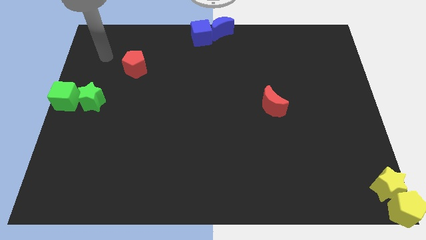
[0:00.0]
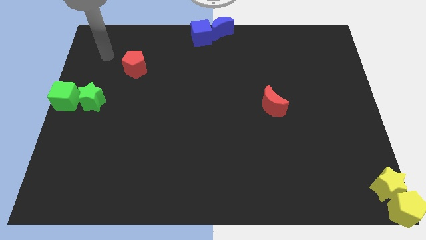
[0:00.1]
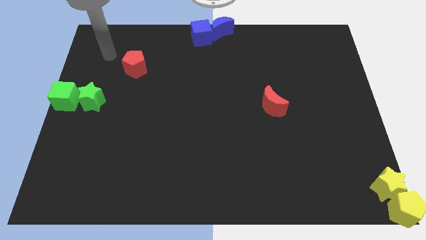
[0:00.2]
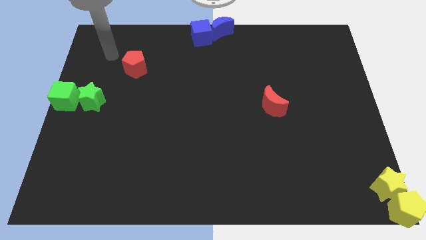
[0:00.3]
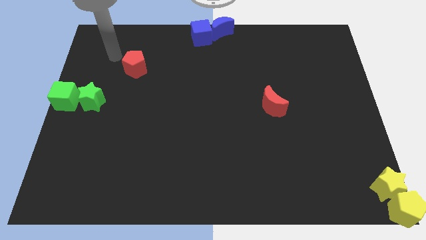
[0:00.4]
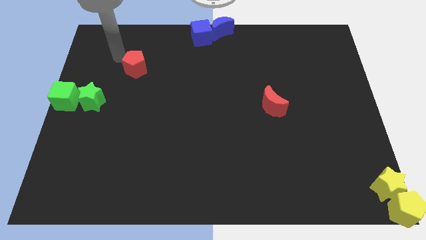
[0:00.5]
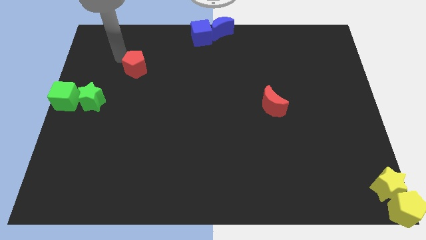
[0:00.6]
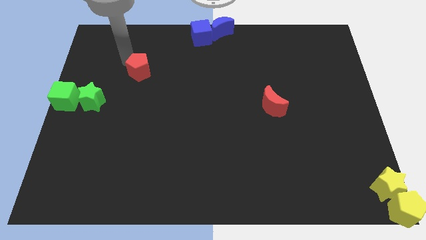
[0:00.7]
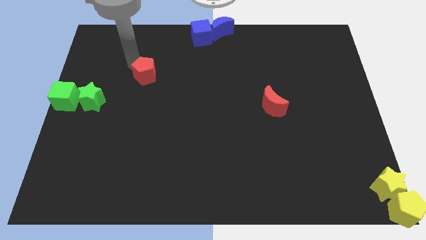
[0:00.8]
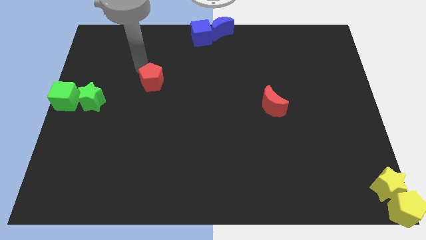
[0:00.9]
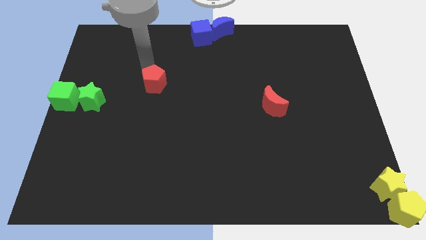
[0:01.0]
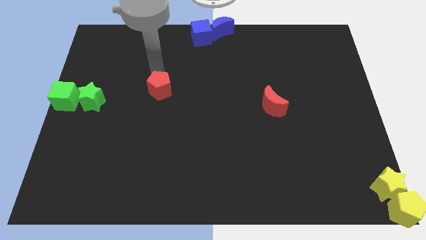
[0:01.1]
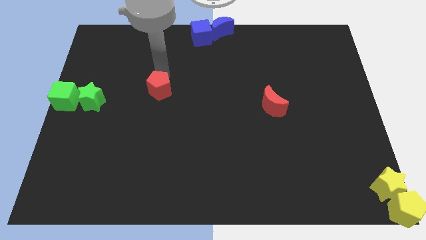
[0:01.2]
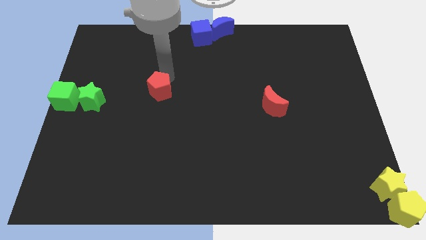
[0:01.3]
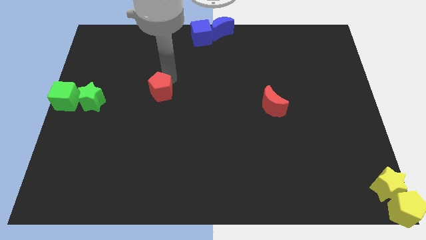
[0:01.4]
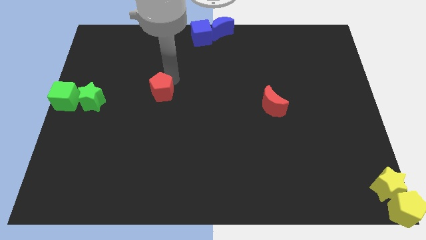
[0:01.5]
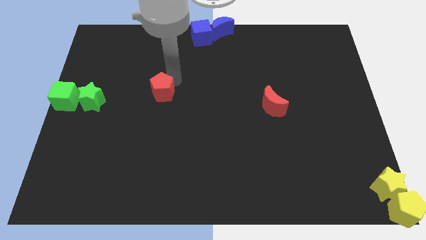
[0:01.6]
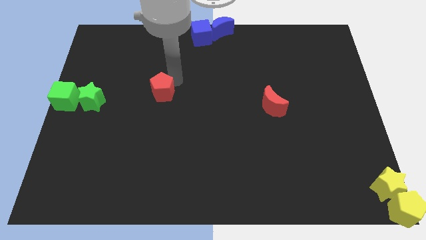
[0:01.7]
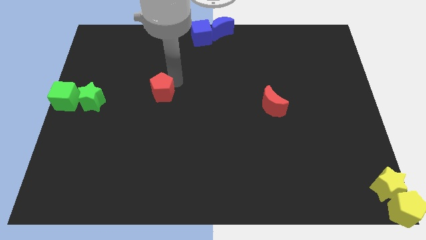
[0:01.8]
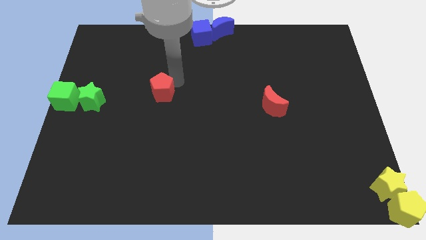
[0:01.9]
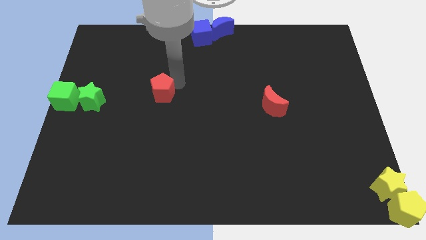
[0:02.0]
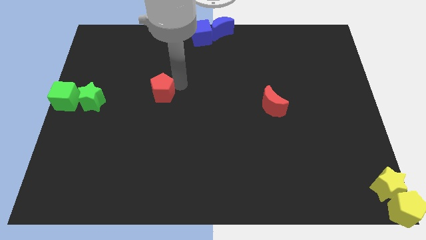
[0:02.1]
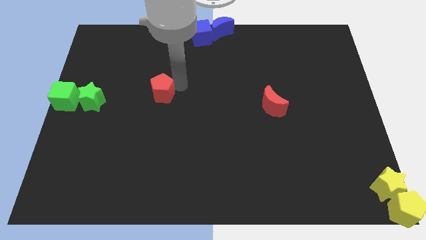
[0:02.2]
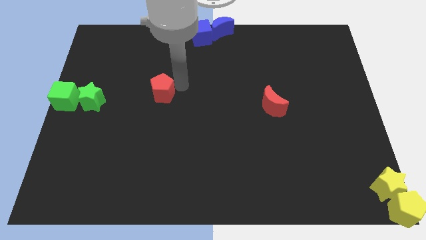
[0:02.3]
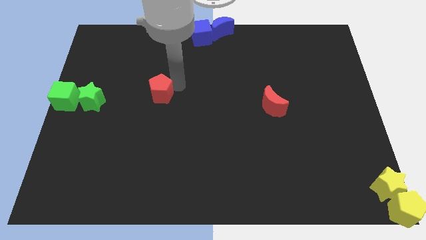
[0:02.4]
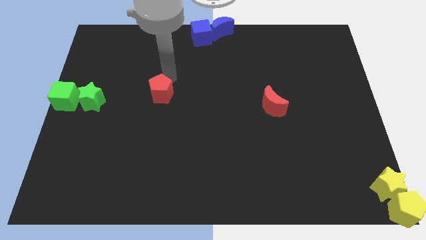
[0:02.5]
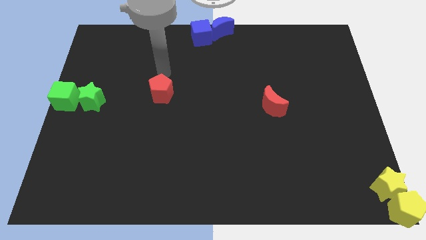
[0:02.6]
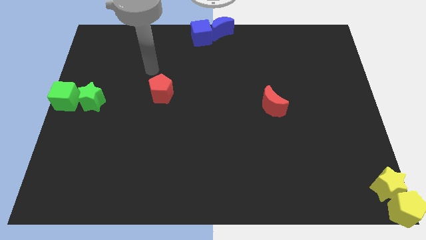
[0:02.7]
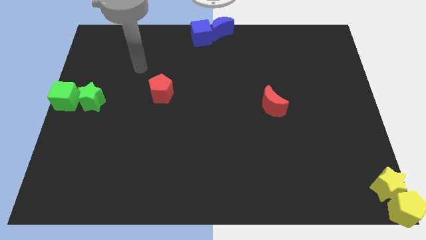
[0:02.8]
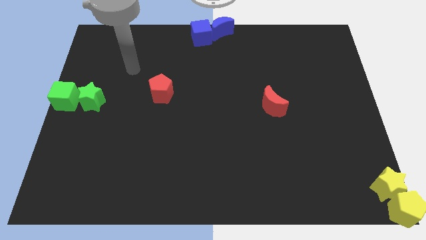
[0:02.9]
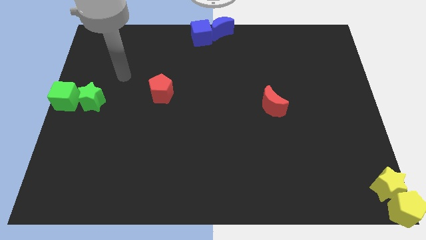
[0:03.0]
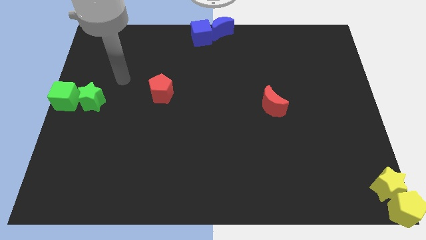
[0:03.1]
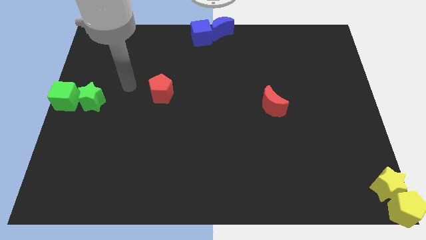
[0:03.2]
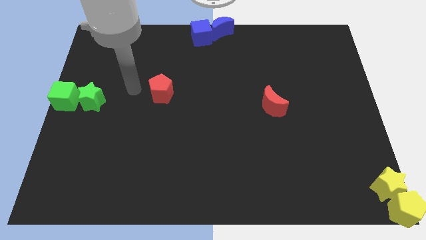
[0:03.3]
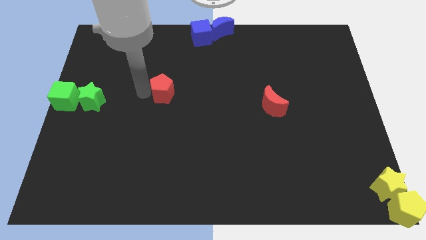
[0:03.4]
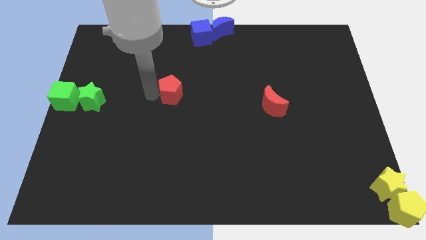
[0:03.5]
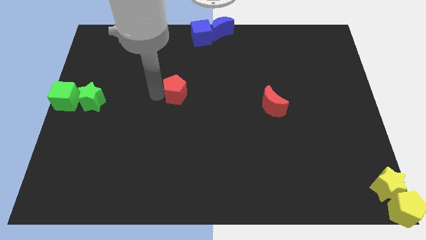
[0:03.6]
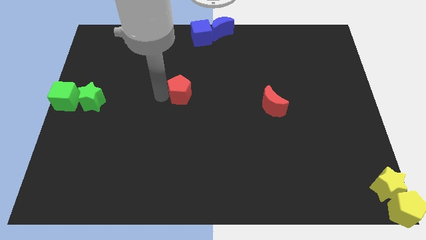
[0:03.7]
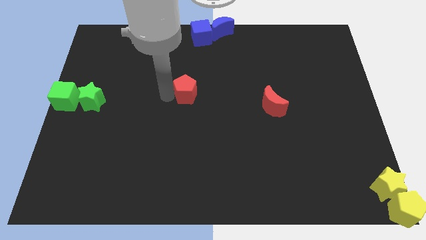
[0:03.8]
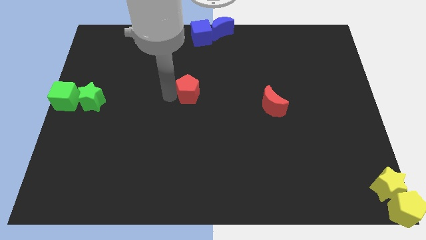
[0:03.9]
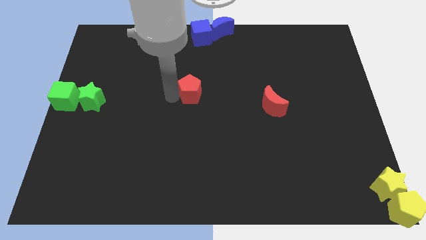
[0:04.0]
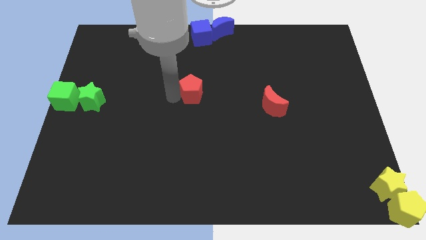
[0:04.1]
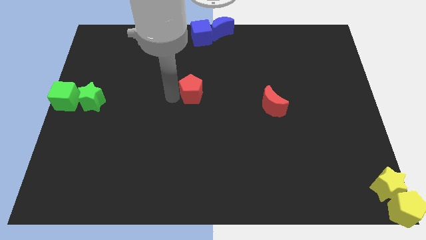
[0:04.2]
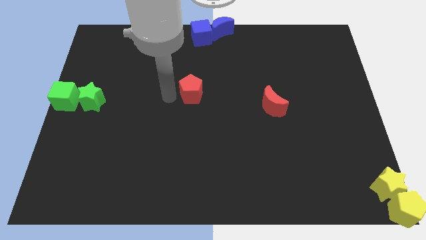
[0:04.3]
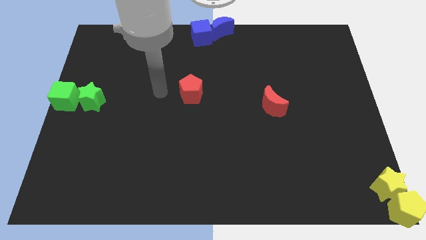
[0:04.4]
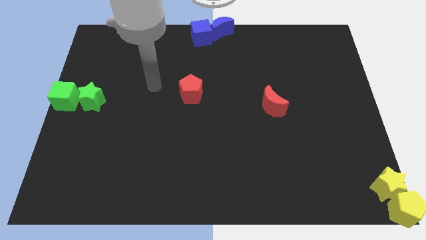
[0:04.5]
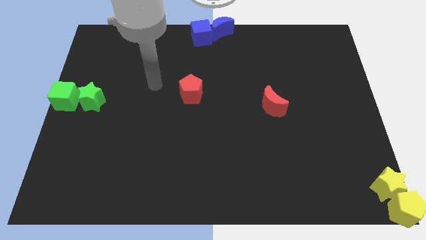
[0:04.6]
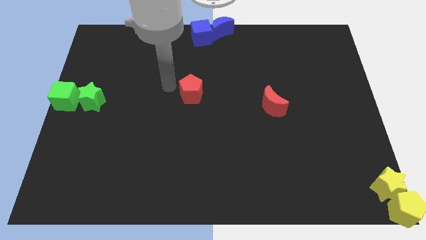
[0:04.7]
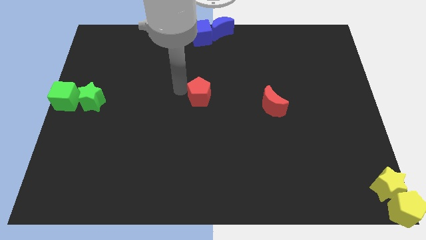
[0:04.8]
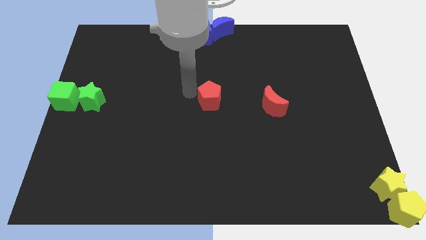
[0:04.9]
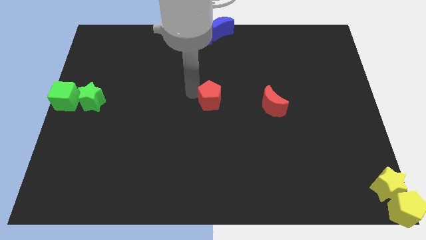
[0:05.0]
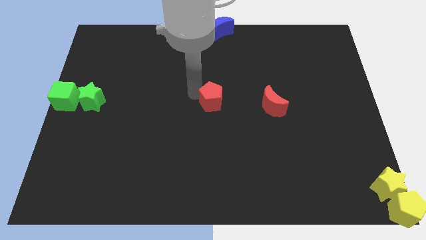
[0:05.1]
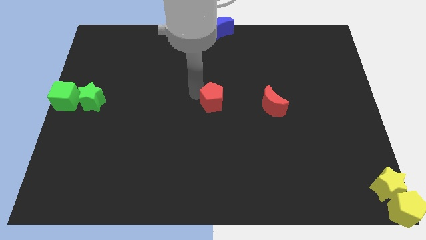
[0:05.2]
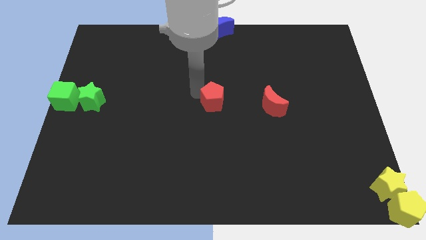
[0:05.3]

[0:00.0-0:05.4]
move red pentagon to the center

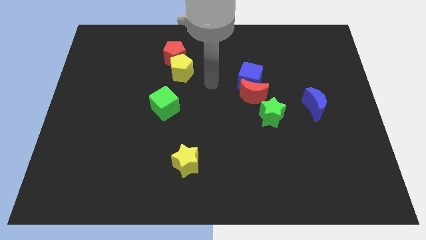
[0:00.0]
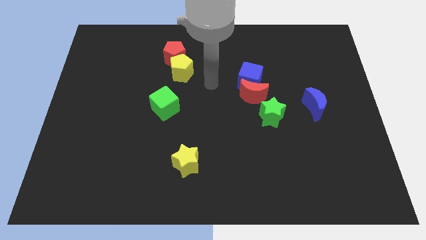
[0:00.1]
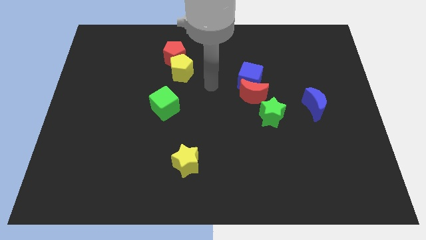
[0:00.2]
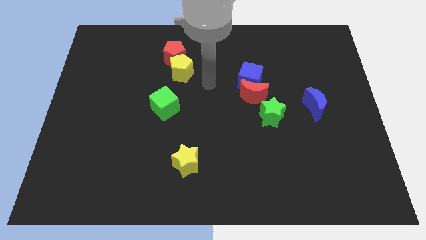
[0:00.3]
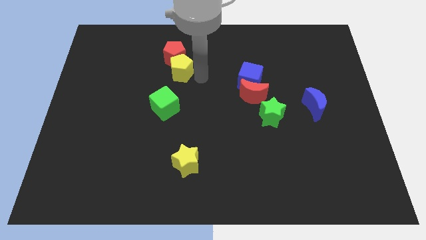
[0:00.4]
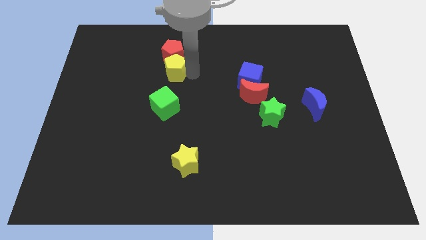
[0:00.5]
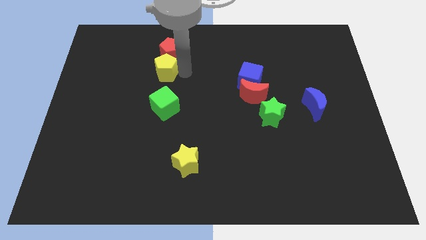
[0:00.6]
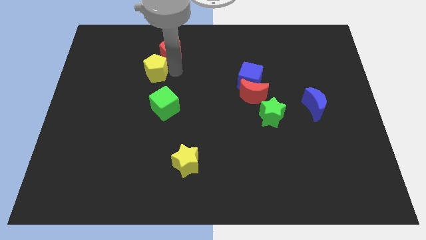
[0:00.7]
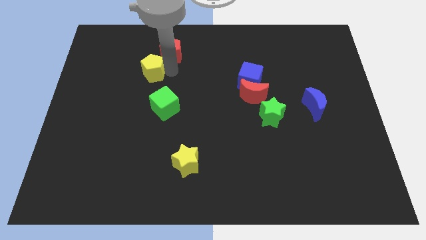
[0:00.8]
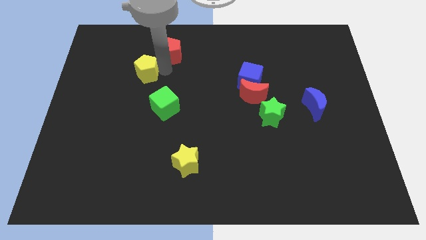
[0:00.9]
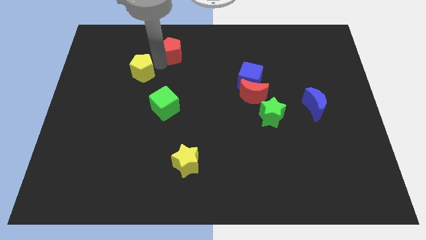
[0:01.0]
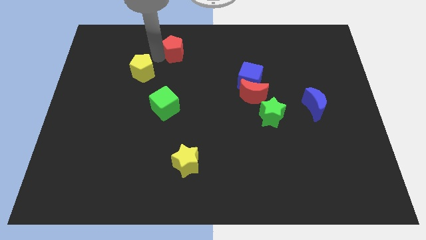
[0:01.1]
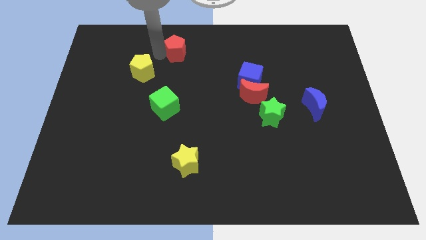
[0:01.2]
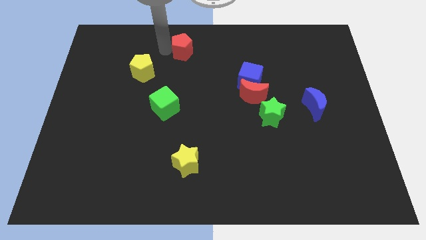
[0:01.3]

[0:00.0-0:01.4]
separate red pentagon from yellow pentagon

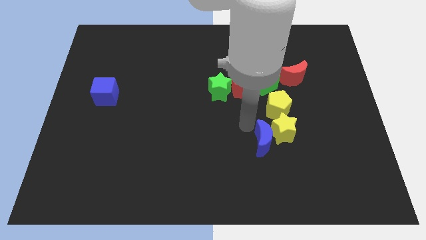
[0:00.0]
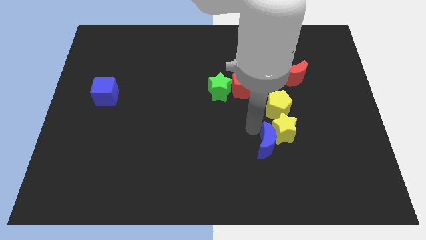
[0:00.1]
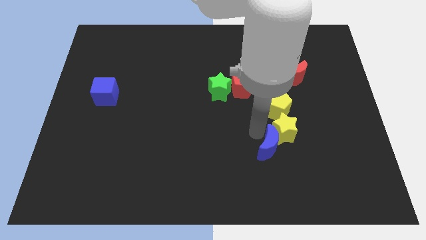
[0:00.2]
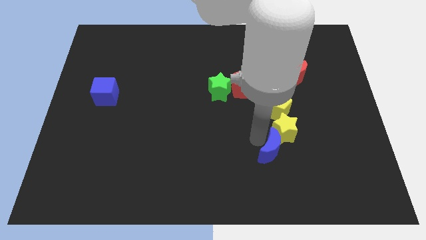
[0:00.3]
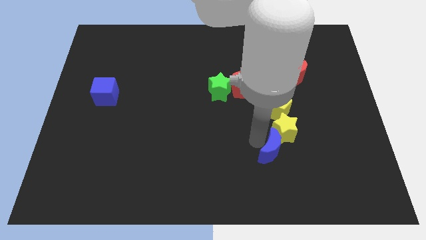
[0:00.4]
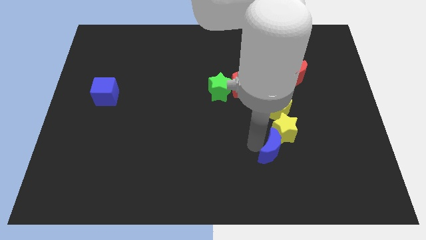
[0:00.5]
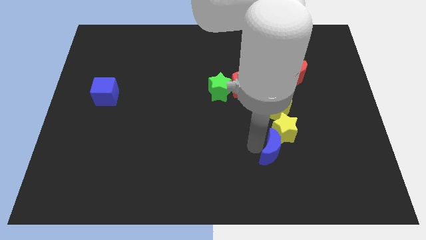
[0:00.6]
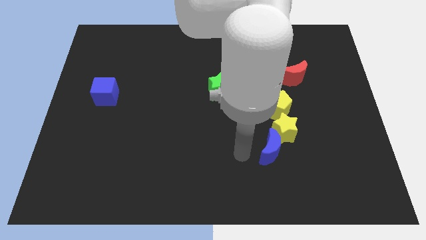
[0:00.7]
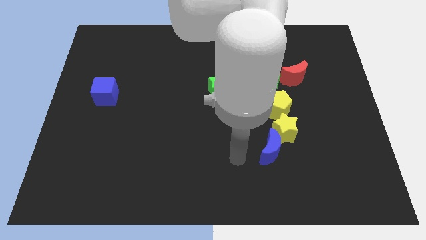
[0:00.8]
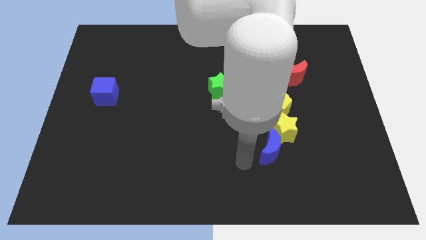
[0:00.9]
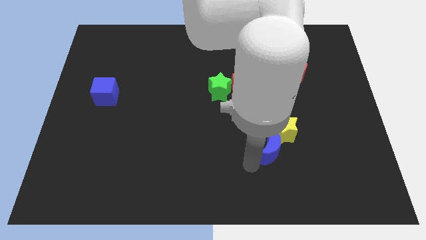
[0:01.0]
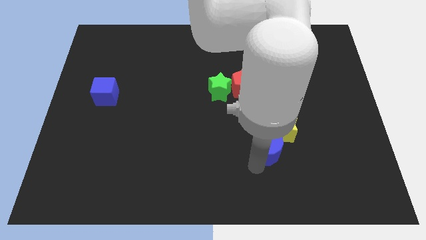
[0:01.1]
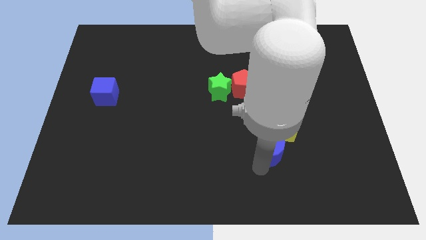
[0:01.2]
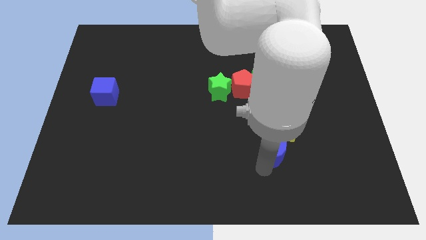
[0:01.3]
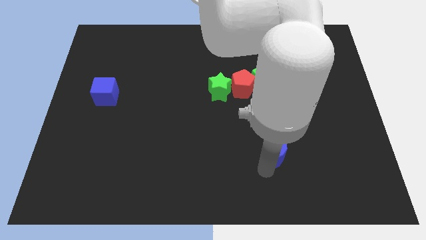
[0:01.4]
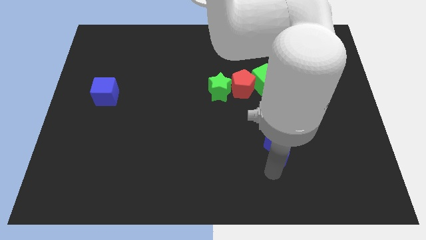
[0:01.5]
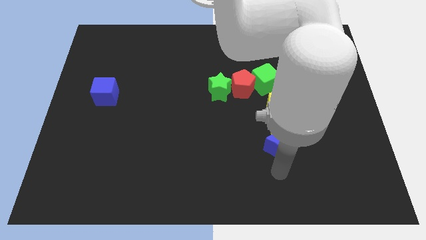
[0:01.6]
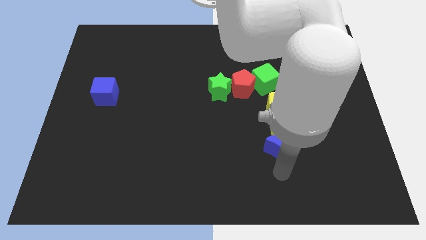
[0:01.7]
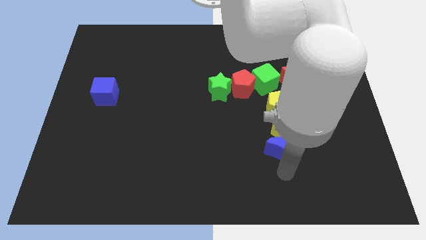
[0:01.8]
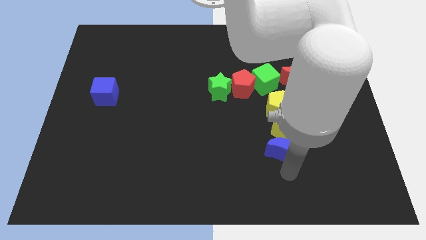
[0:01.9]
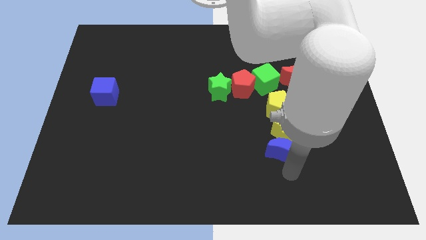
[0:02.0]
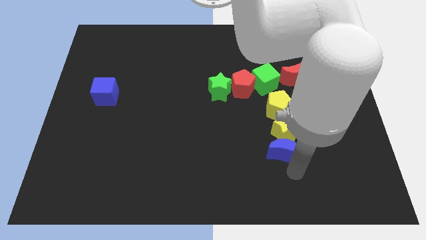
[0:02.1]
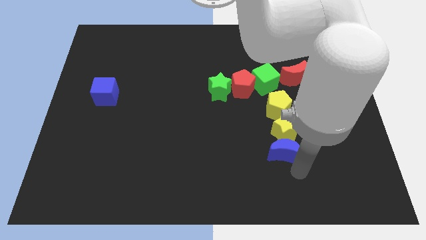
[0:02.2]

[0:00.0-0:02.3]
push blue crescent below to the yellow star
